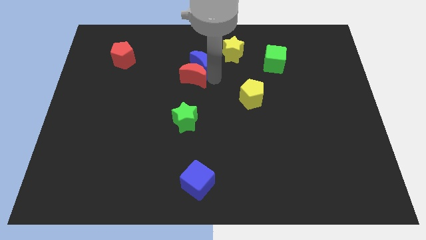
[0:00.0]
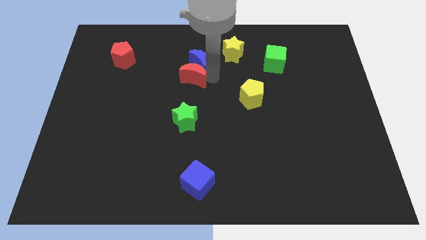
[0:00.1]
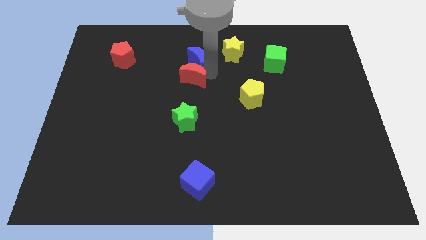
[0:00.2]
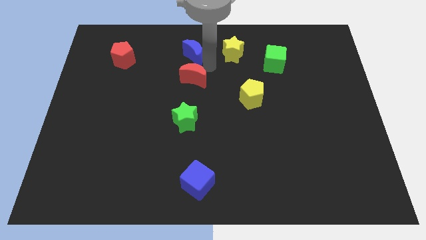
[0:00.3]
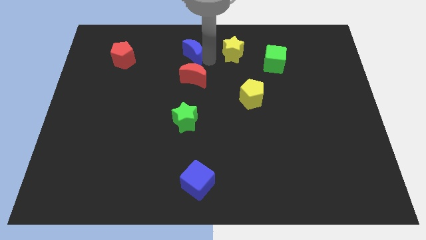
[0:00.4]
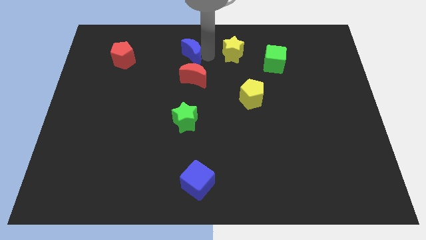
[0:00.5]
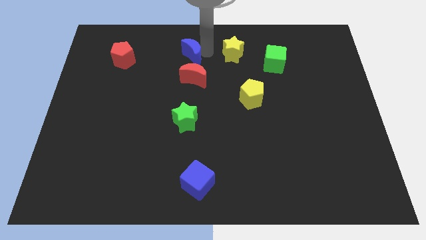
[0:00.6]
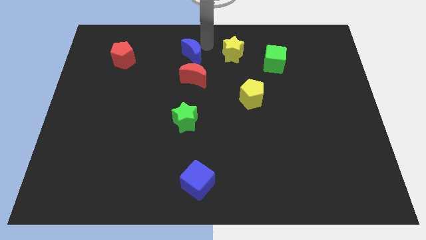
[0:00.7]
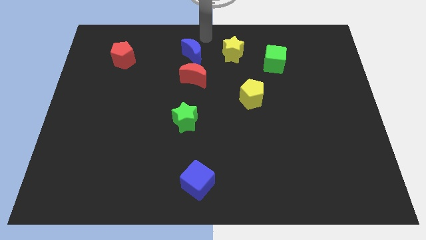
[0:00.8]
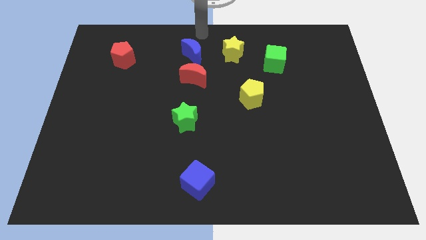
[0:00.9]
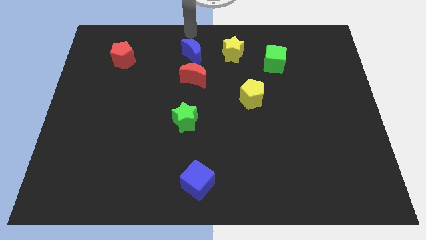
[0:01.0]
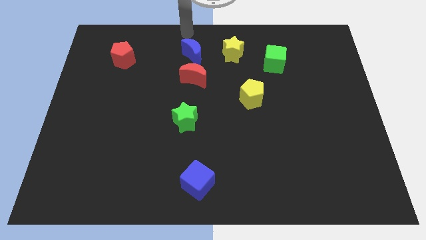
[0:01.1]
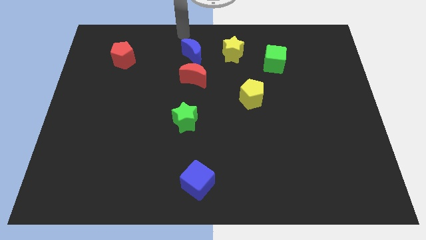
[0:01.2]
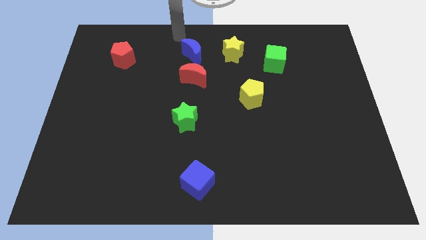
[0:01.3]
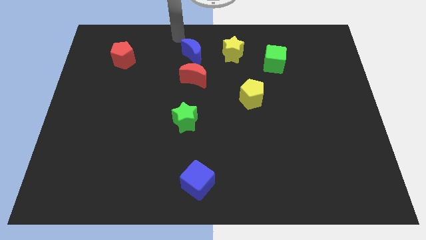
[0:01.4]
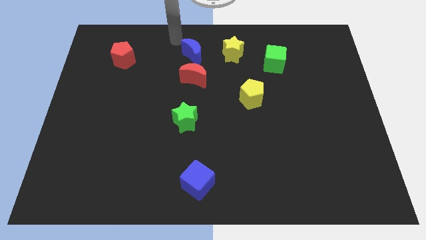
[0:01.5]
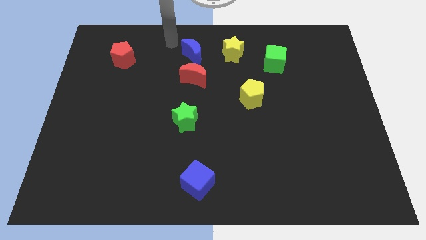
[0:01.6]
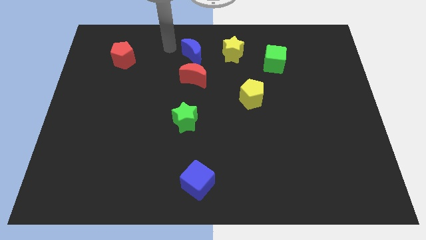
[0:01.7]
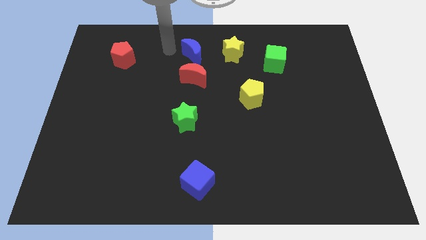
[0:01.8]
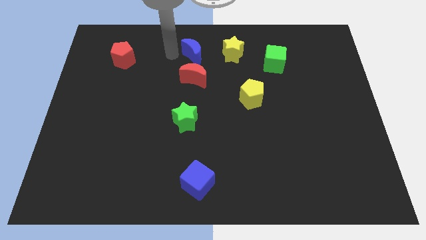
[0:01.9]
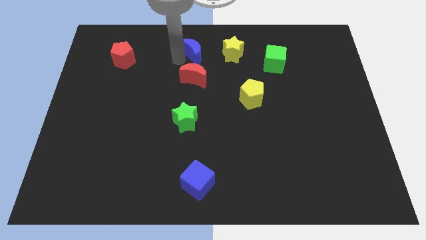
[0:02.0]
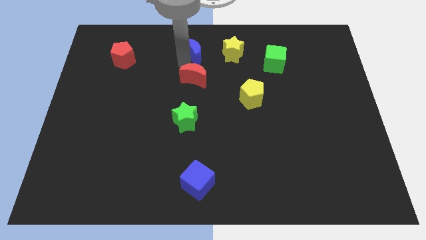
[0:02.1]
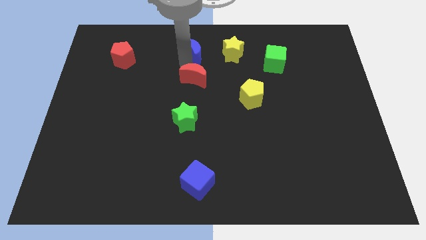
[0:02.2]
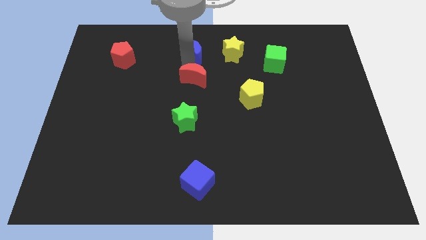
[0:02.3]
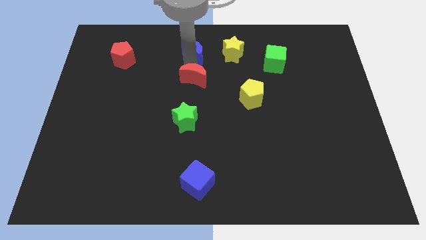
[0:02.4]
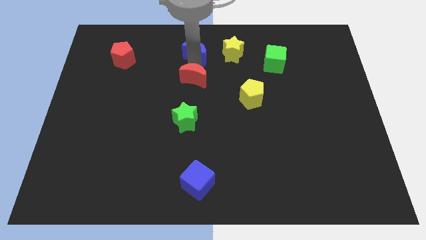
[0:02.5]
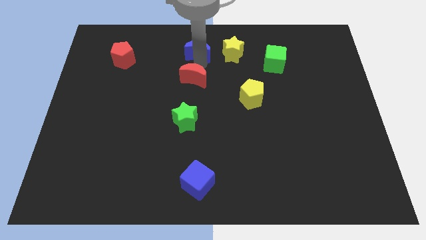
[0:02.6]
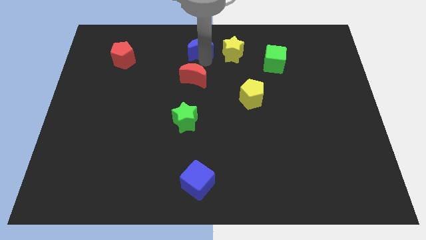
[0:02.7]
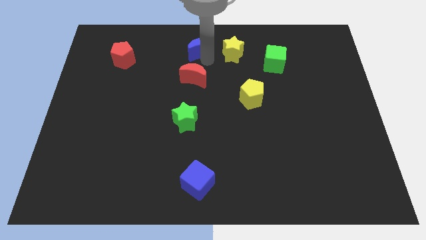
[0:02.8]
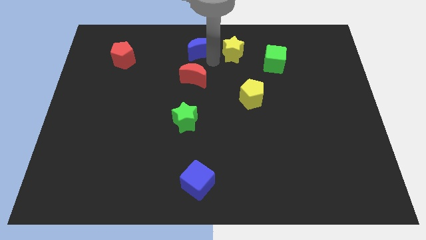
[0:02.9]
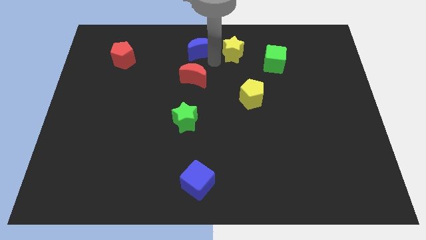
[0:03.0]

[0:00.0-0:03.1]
separate red moon and blue moon

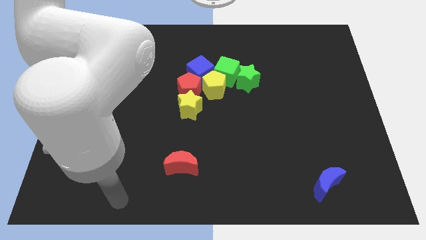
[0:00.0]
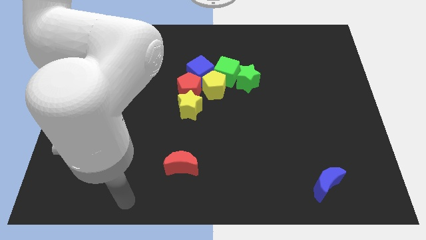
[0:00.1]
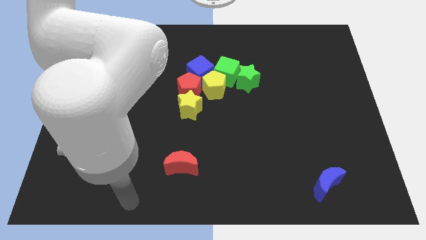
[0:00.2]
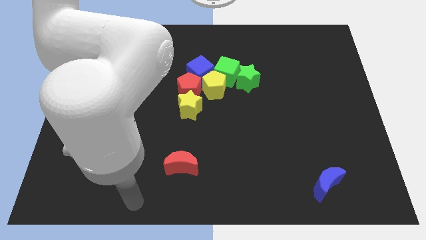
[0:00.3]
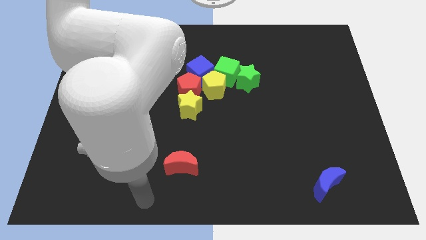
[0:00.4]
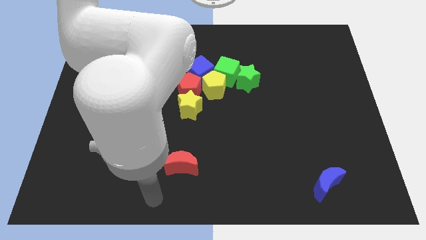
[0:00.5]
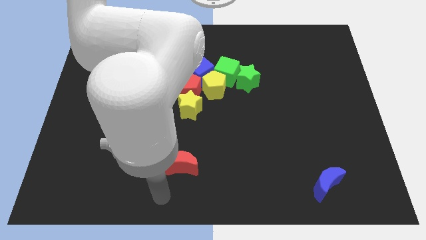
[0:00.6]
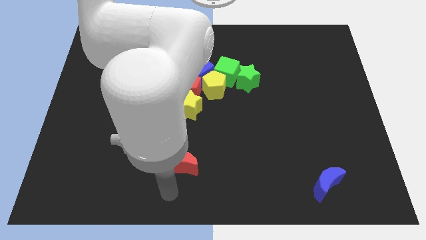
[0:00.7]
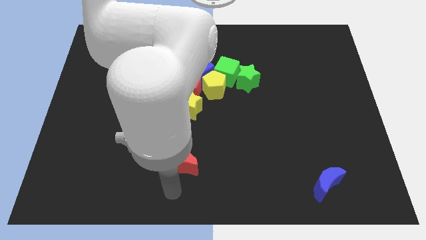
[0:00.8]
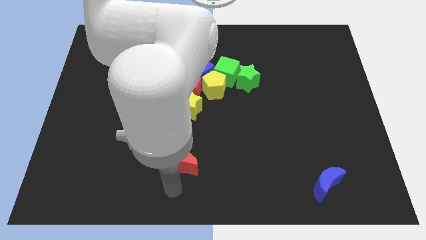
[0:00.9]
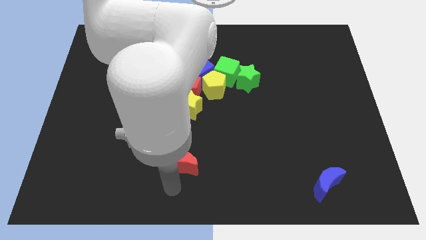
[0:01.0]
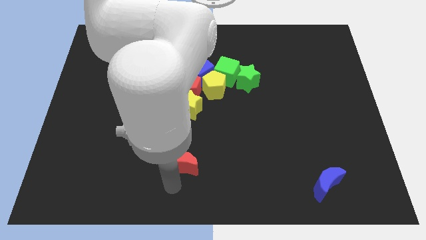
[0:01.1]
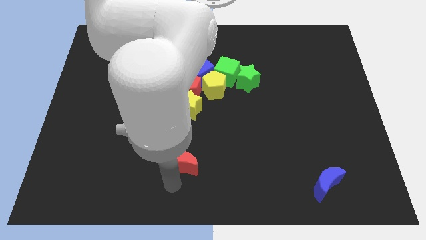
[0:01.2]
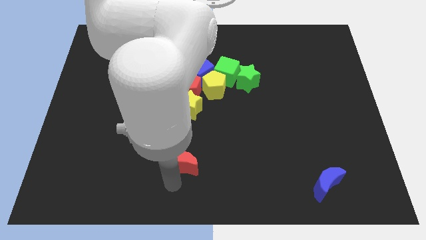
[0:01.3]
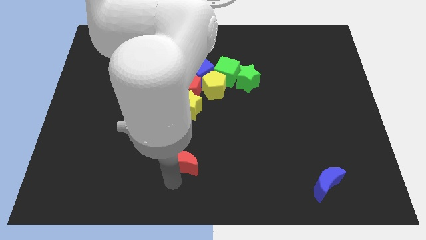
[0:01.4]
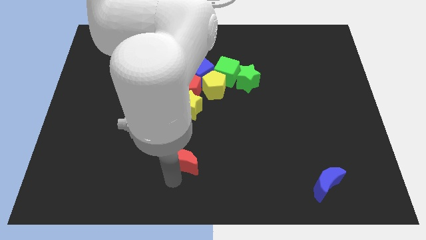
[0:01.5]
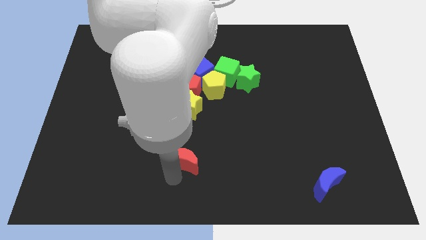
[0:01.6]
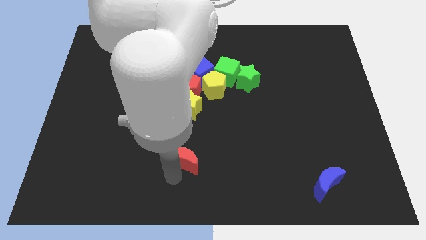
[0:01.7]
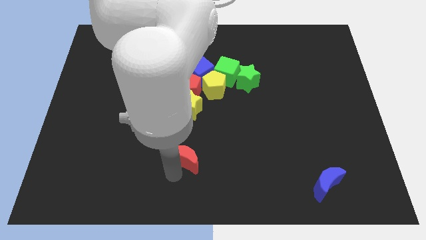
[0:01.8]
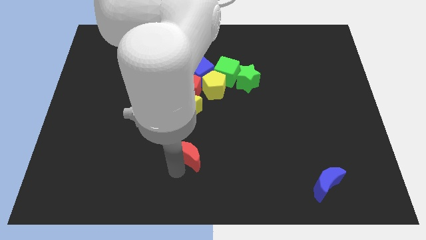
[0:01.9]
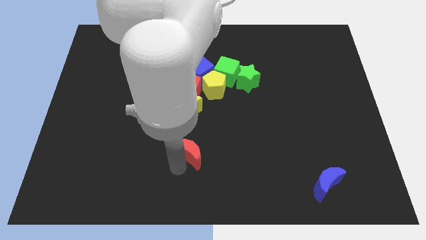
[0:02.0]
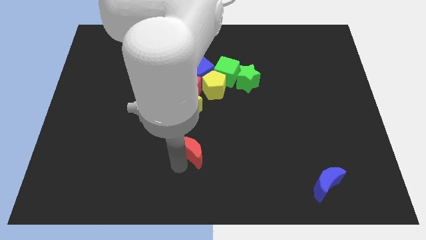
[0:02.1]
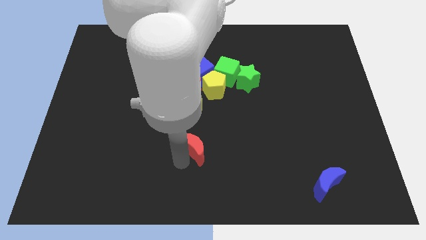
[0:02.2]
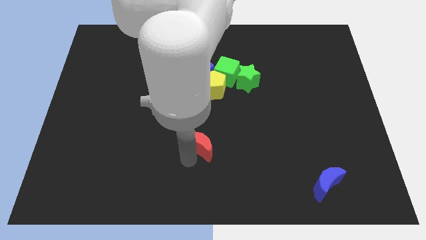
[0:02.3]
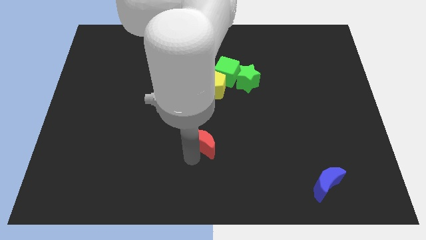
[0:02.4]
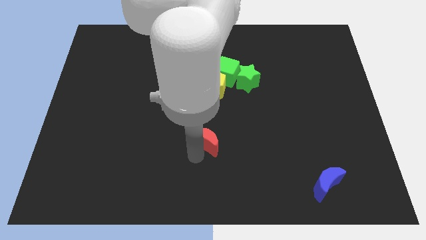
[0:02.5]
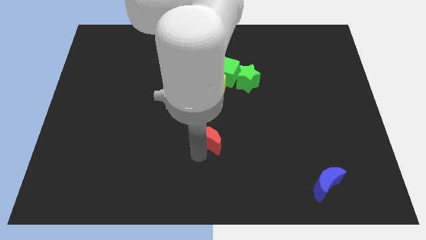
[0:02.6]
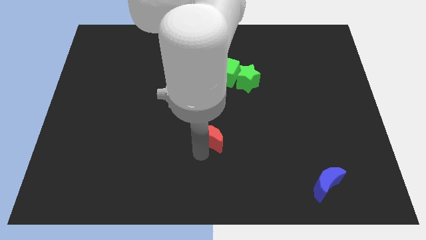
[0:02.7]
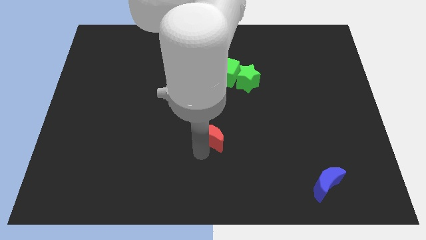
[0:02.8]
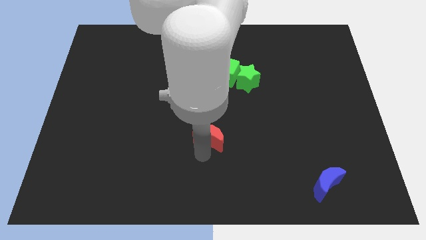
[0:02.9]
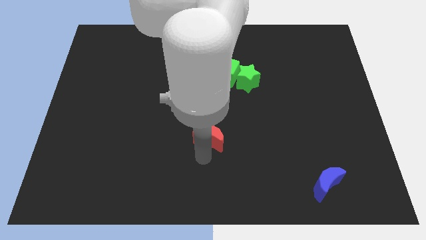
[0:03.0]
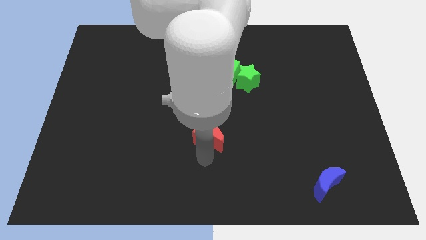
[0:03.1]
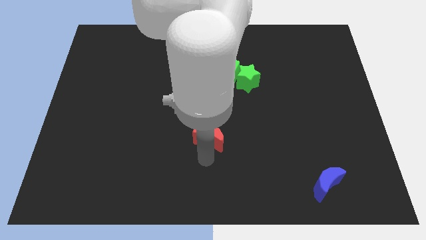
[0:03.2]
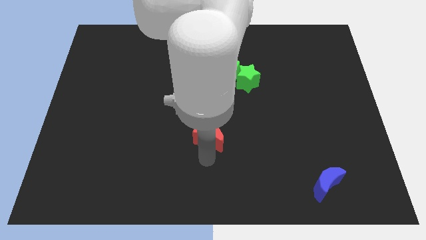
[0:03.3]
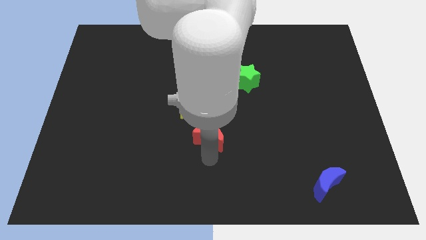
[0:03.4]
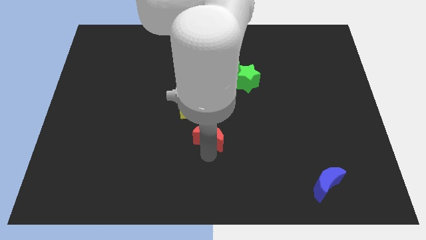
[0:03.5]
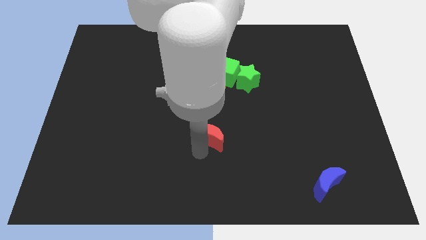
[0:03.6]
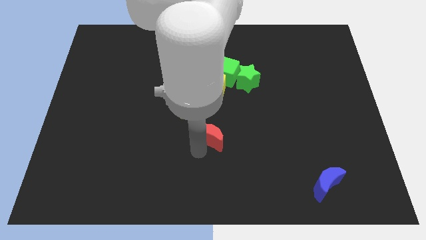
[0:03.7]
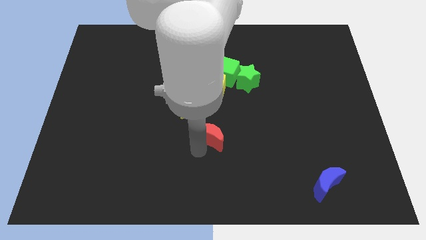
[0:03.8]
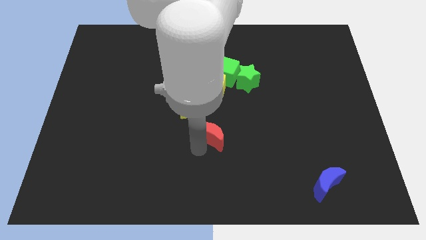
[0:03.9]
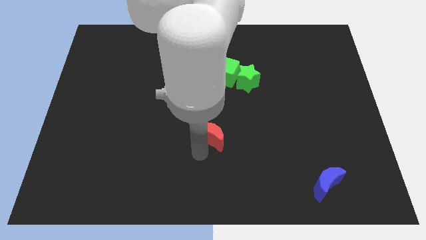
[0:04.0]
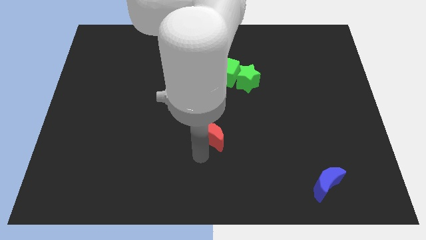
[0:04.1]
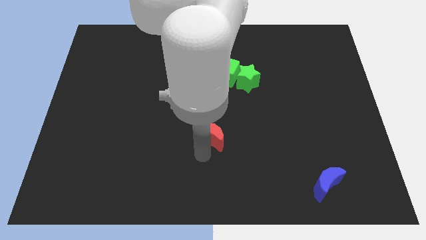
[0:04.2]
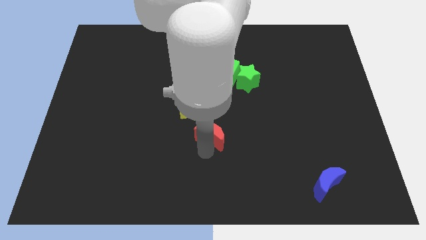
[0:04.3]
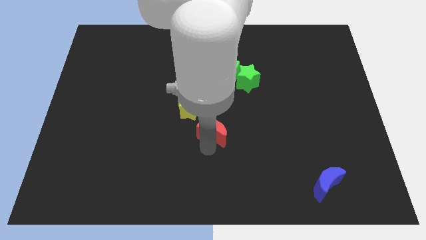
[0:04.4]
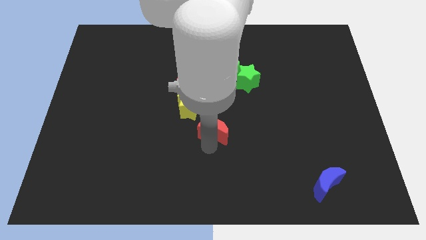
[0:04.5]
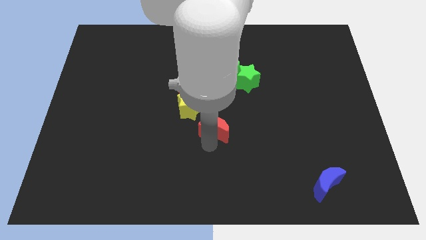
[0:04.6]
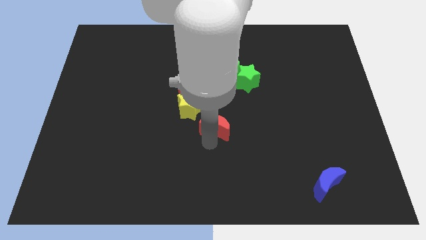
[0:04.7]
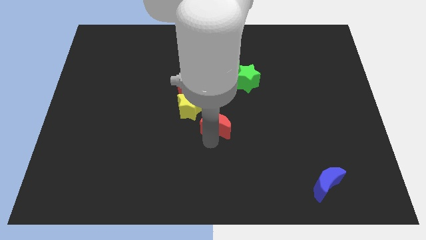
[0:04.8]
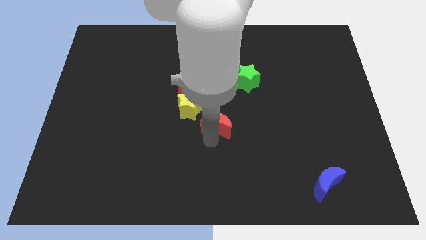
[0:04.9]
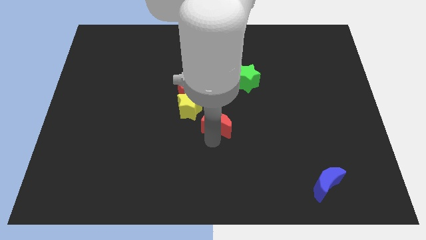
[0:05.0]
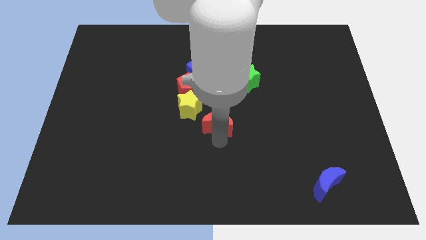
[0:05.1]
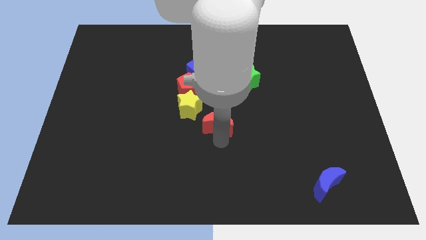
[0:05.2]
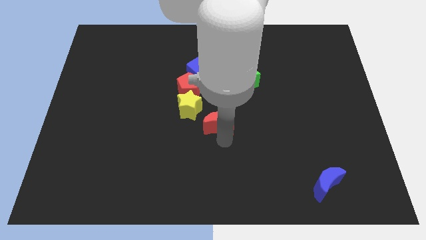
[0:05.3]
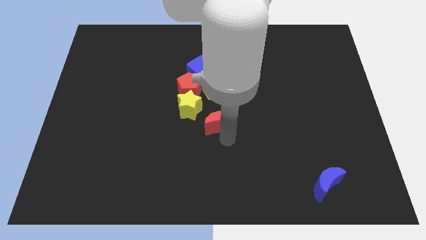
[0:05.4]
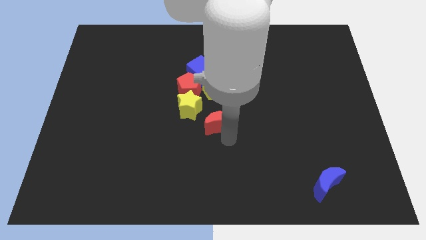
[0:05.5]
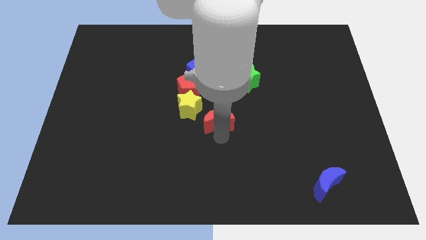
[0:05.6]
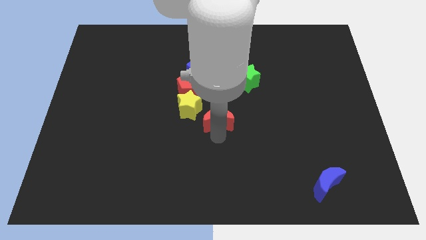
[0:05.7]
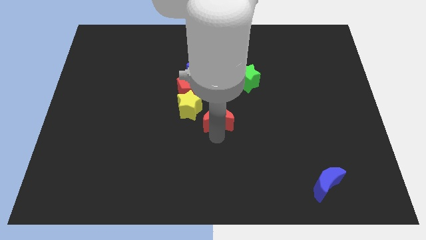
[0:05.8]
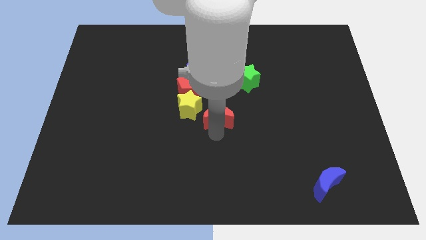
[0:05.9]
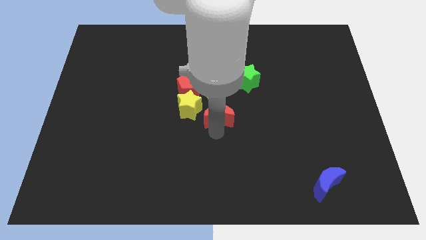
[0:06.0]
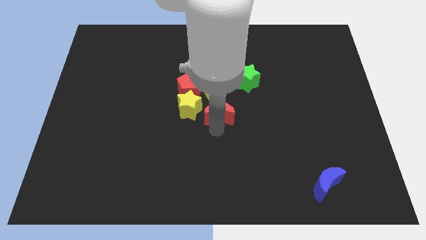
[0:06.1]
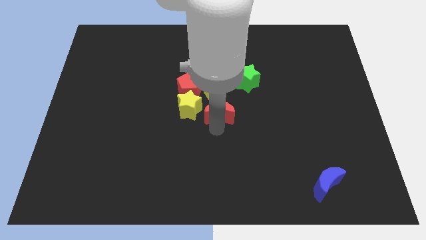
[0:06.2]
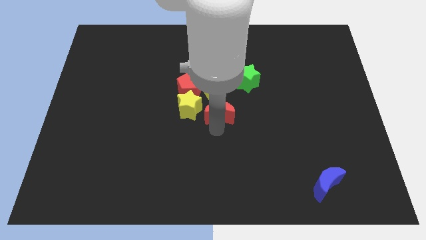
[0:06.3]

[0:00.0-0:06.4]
place the red crescent to the right of the yellow star
